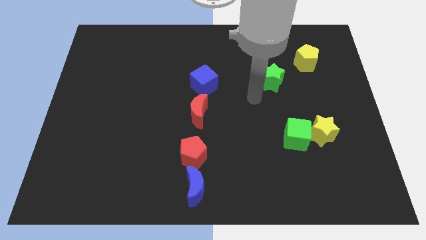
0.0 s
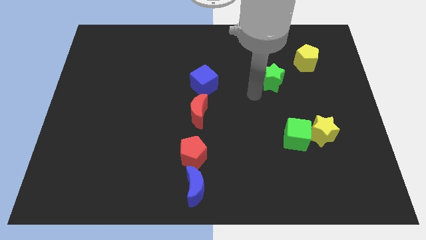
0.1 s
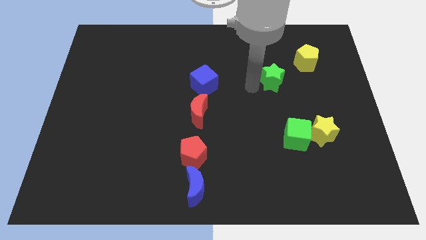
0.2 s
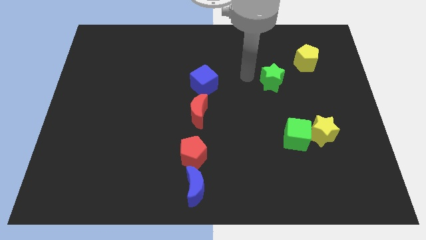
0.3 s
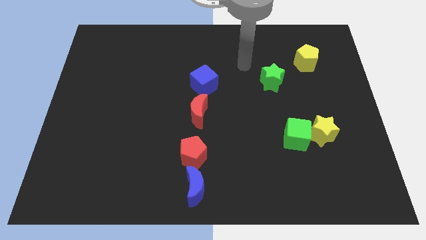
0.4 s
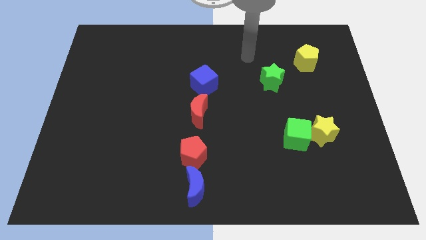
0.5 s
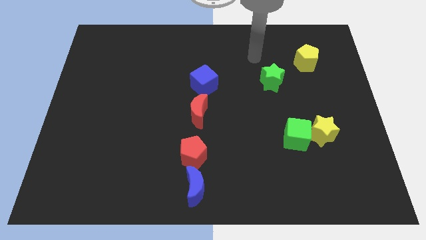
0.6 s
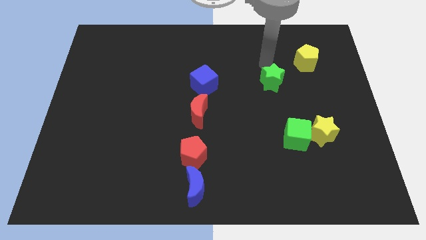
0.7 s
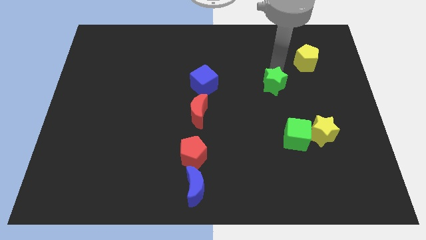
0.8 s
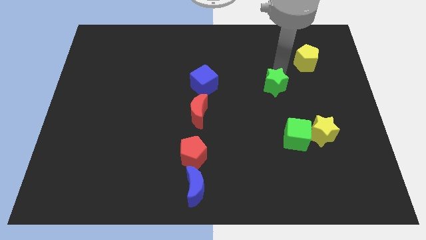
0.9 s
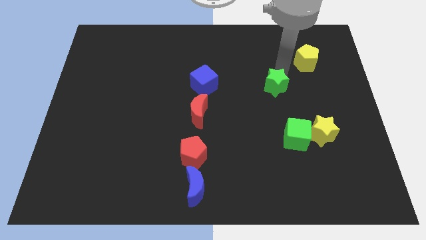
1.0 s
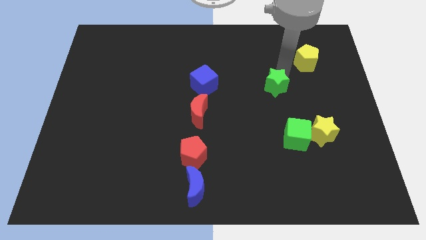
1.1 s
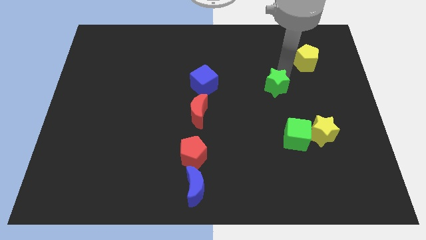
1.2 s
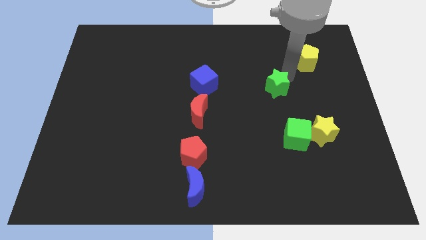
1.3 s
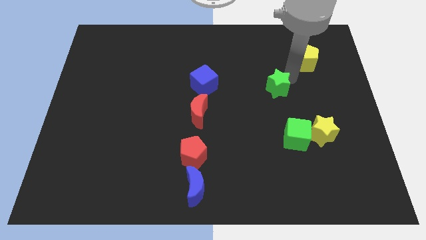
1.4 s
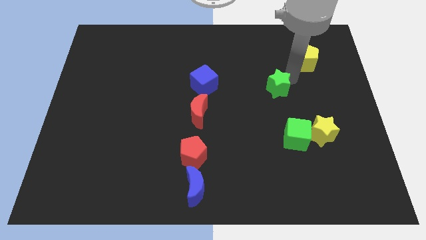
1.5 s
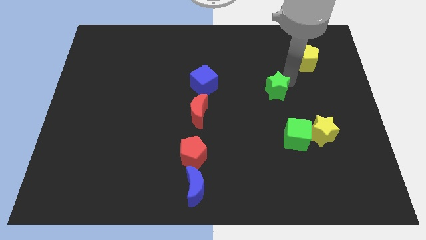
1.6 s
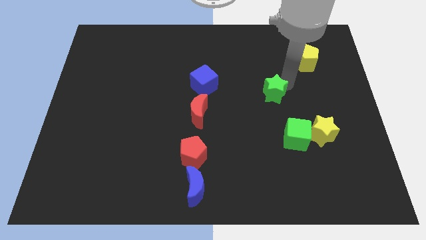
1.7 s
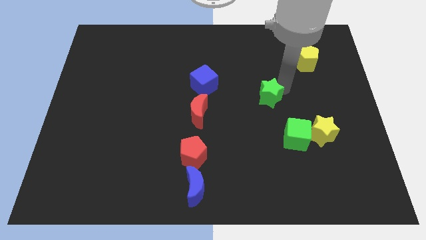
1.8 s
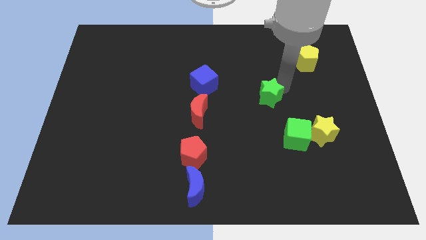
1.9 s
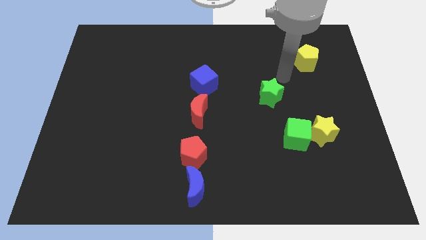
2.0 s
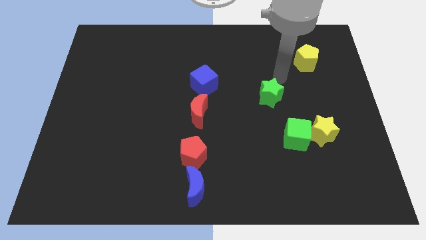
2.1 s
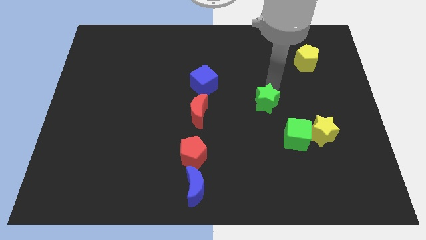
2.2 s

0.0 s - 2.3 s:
move the green star towards the green cube

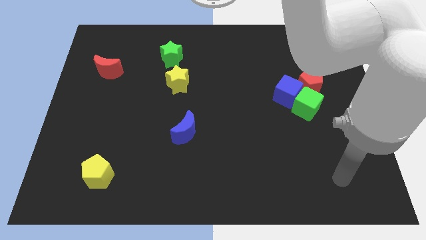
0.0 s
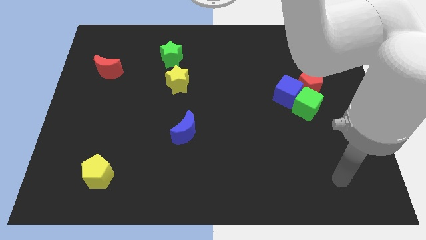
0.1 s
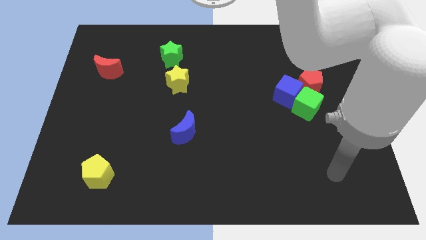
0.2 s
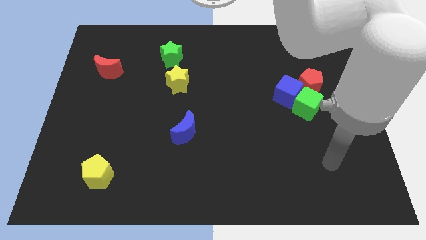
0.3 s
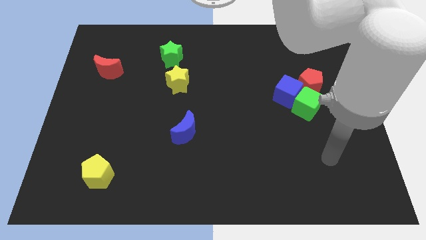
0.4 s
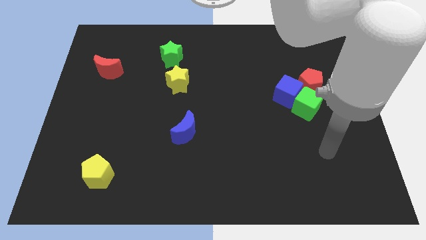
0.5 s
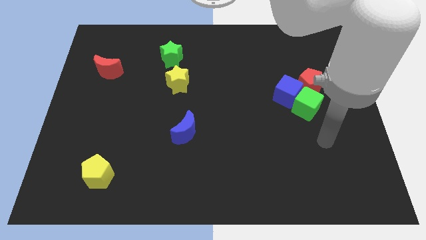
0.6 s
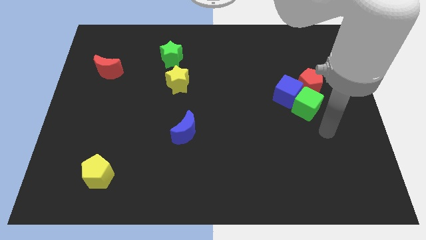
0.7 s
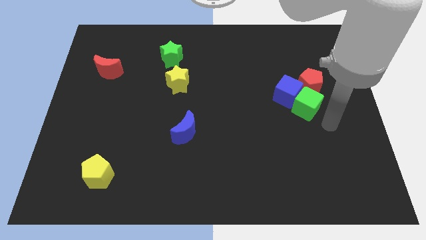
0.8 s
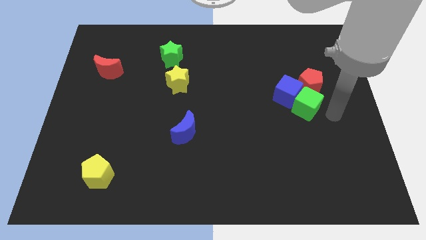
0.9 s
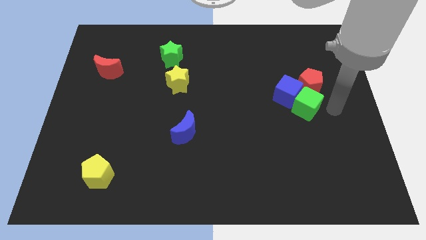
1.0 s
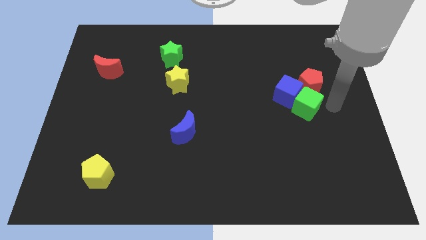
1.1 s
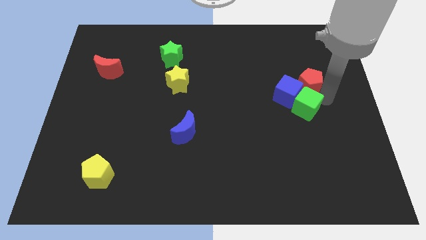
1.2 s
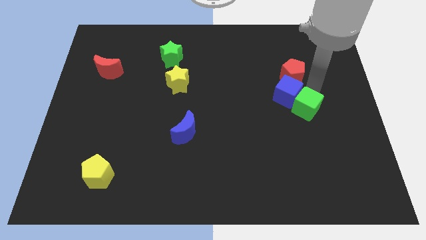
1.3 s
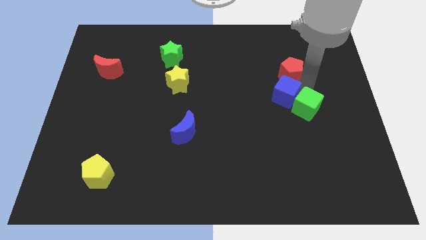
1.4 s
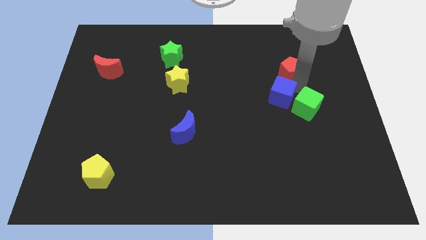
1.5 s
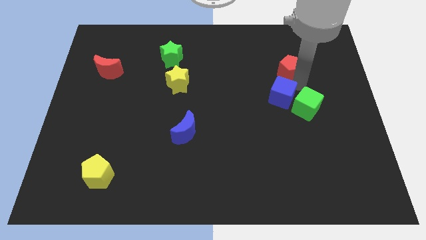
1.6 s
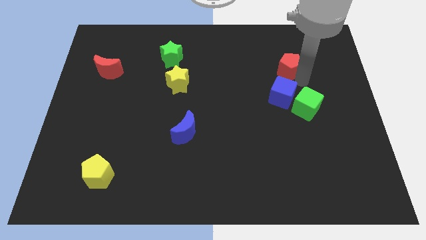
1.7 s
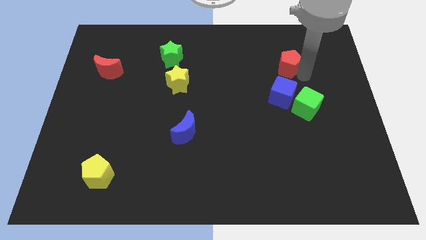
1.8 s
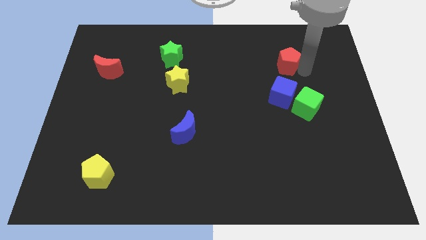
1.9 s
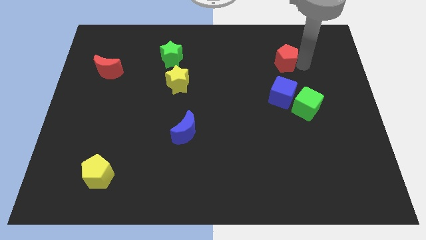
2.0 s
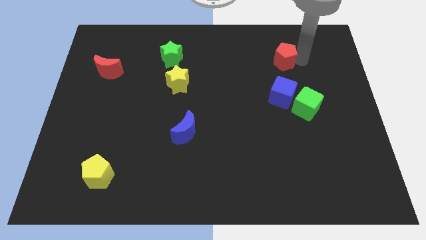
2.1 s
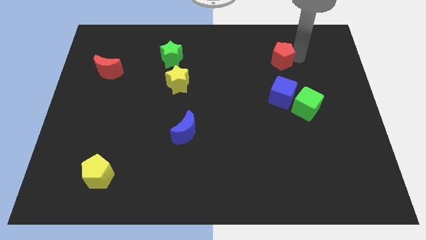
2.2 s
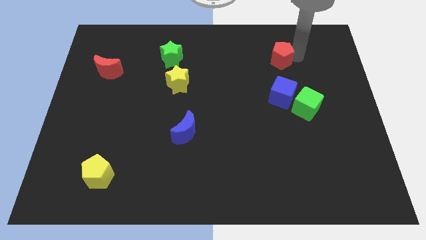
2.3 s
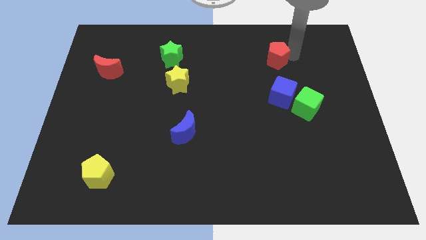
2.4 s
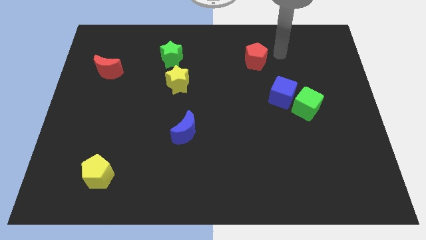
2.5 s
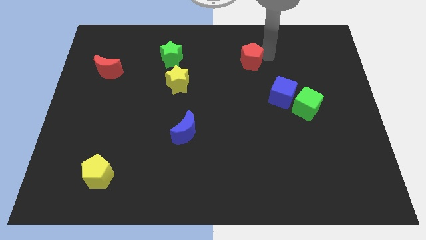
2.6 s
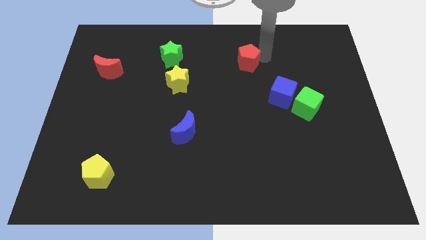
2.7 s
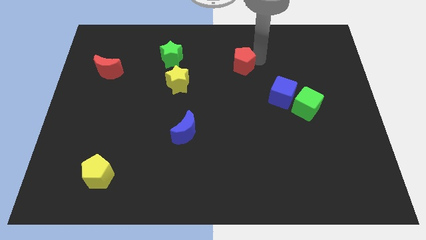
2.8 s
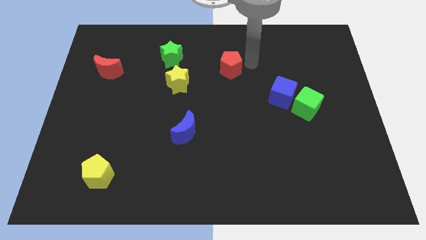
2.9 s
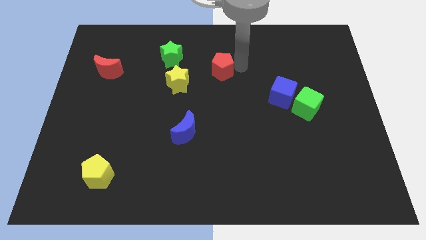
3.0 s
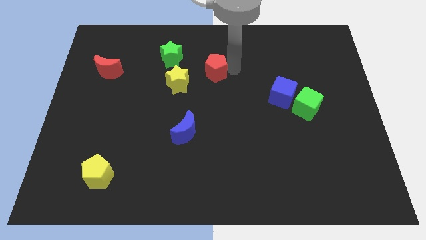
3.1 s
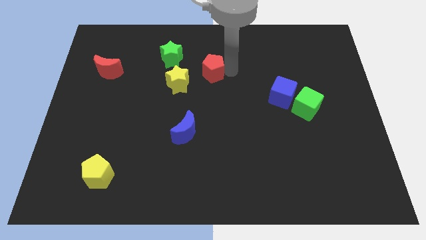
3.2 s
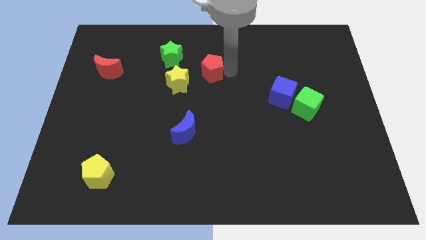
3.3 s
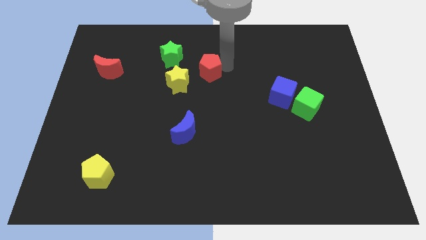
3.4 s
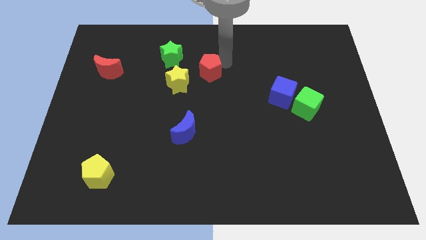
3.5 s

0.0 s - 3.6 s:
move the red pentagon to the right side of the yellow star

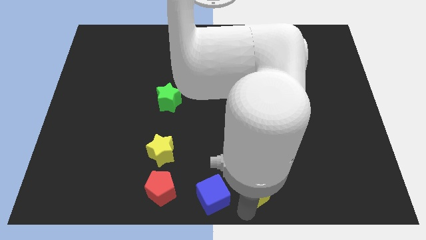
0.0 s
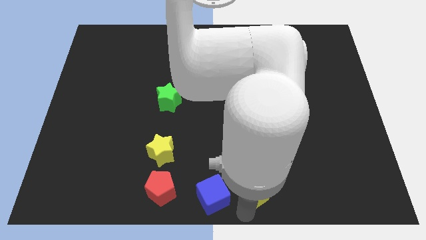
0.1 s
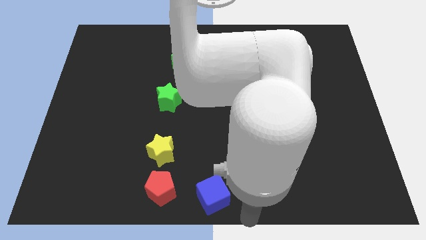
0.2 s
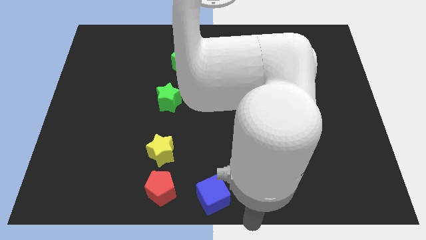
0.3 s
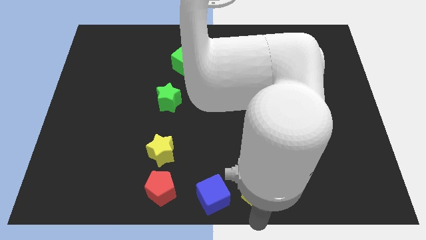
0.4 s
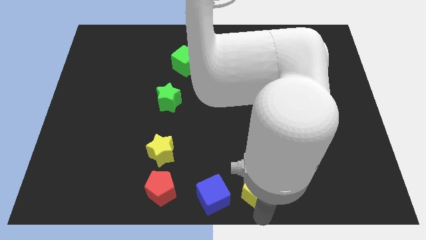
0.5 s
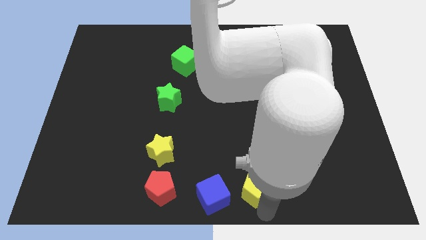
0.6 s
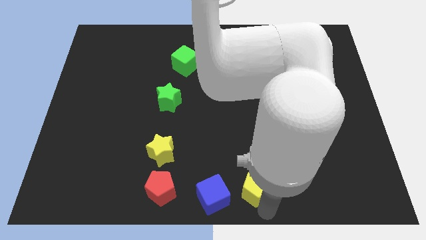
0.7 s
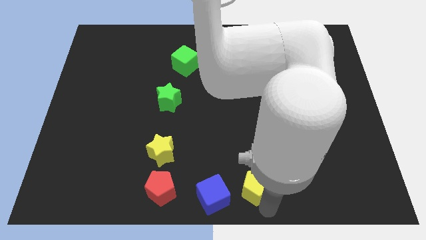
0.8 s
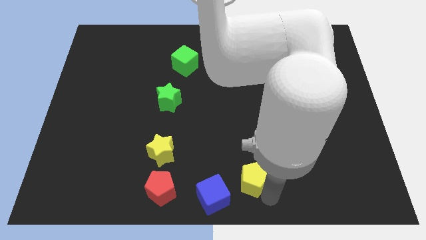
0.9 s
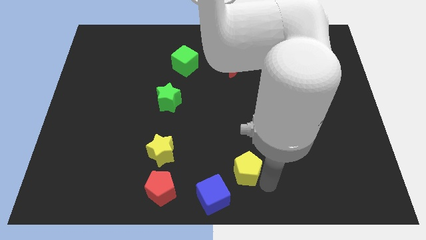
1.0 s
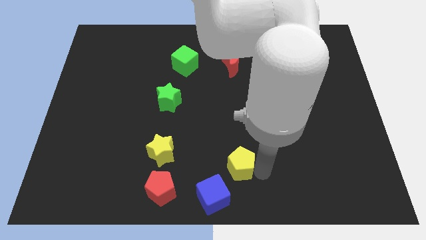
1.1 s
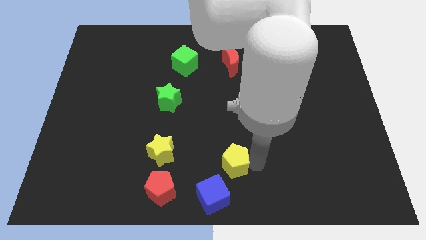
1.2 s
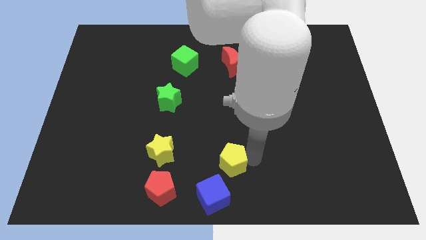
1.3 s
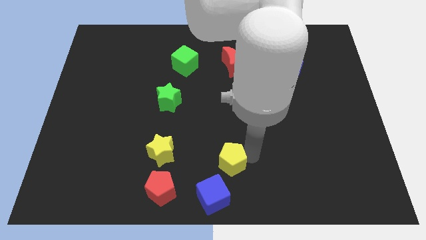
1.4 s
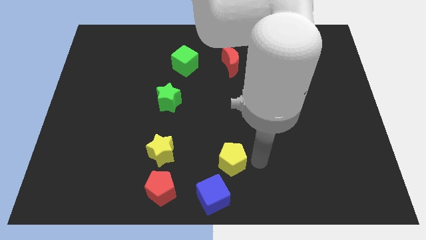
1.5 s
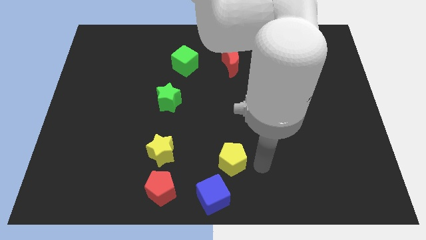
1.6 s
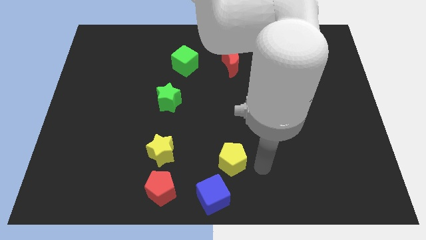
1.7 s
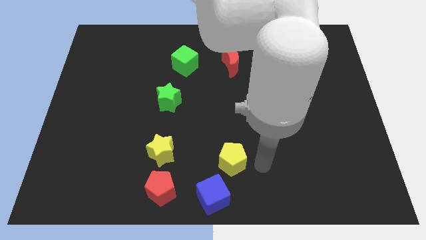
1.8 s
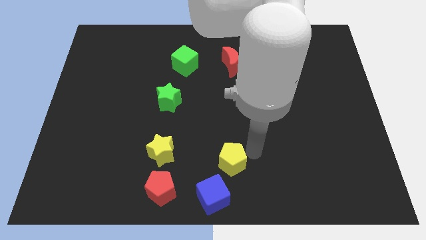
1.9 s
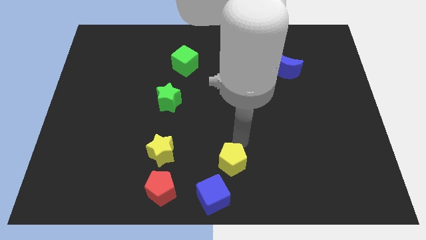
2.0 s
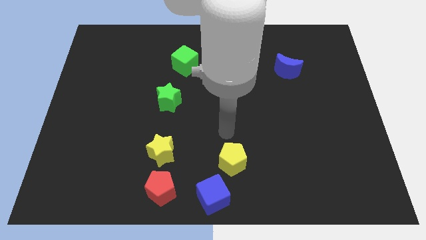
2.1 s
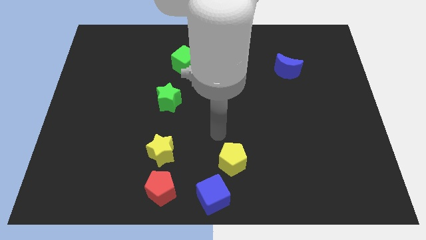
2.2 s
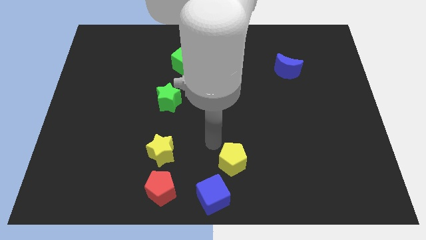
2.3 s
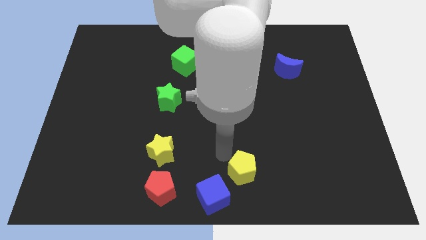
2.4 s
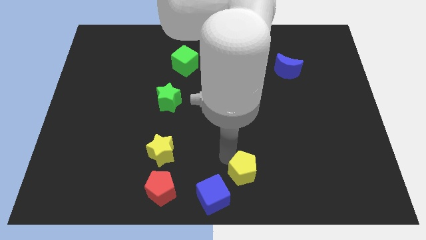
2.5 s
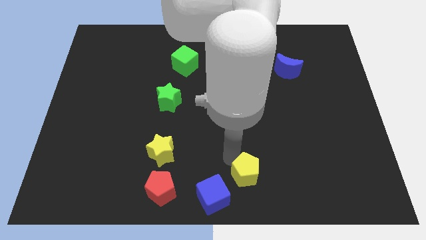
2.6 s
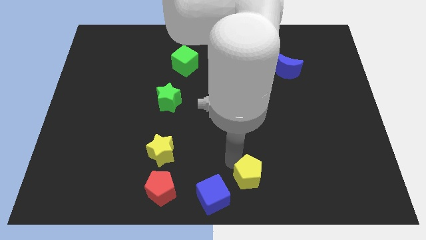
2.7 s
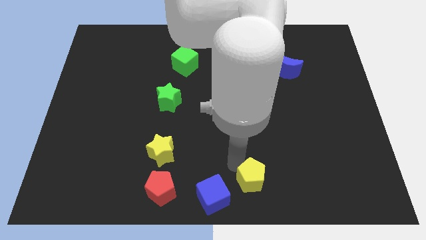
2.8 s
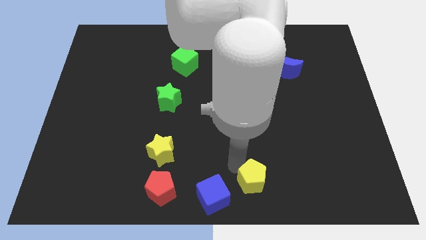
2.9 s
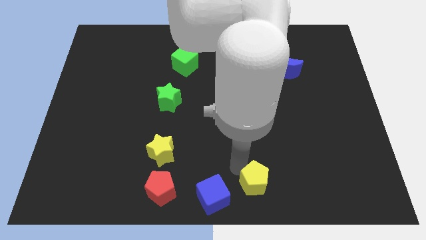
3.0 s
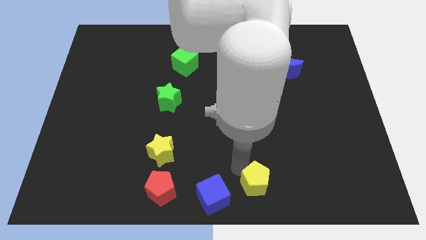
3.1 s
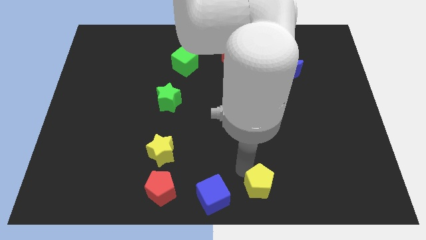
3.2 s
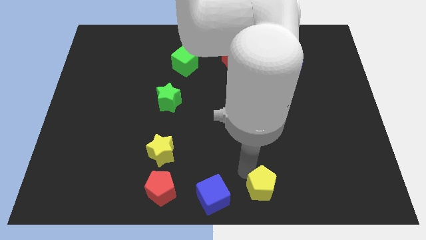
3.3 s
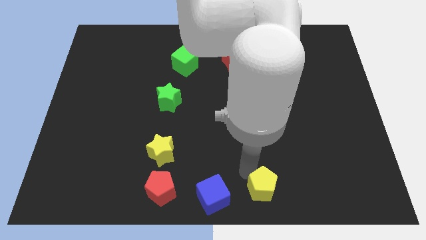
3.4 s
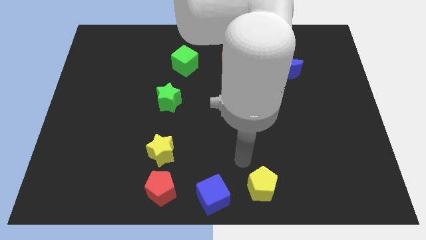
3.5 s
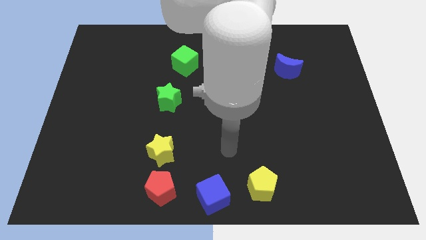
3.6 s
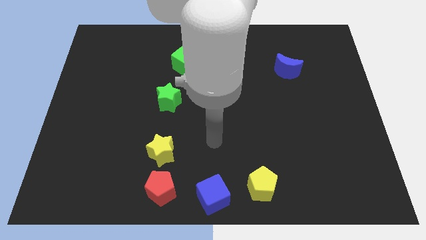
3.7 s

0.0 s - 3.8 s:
push yellow pentagon forward and backward
